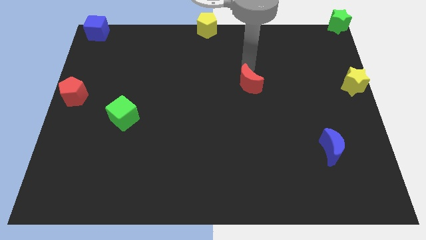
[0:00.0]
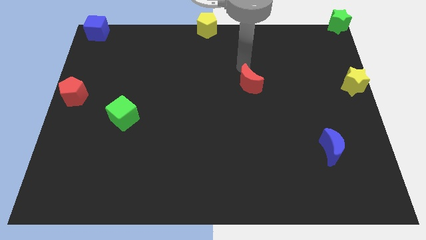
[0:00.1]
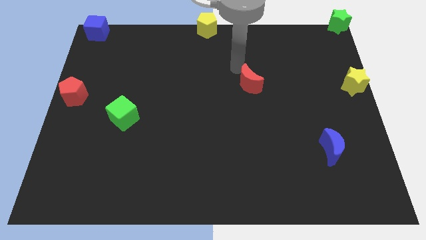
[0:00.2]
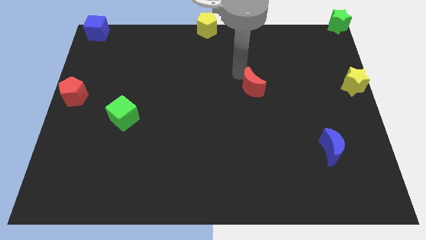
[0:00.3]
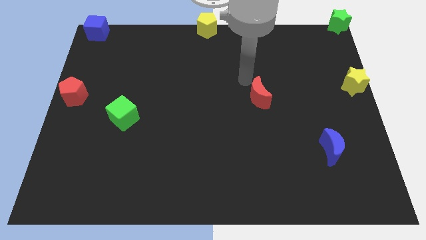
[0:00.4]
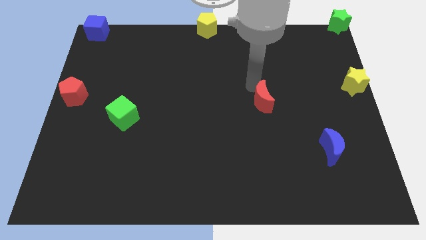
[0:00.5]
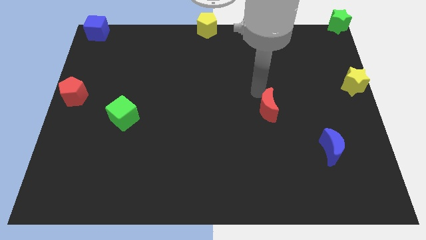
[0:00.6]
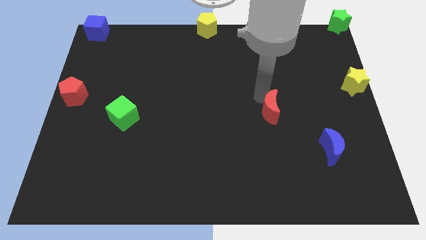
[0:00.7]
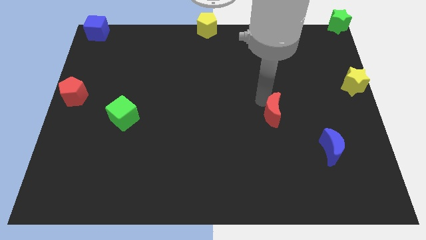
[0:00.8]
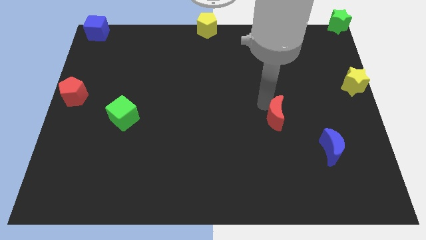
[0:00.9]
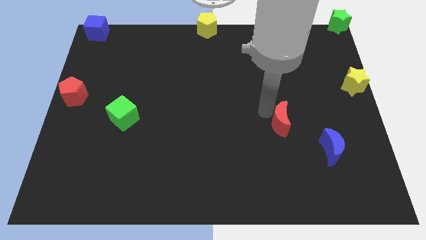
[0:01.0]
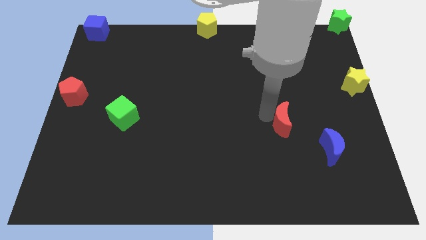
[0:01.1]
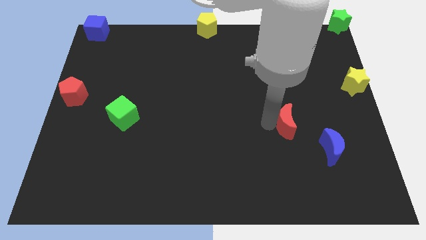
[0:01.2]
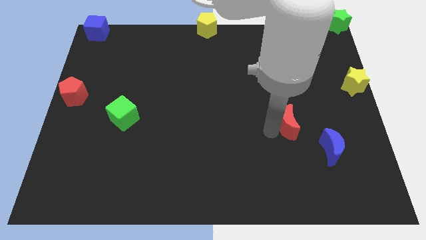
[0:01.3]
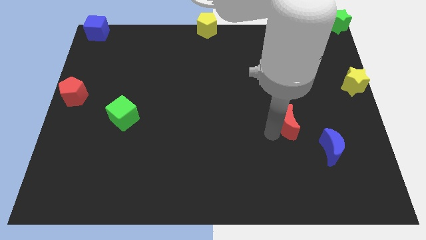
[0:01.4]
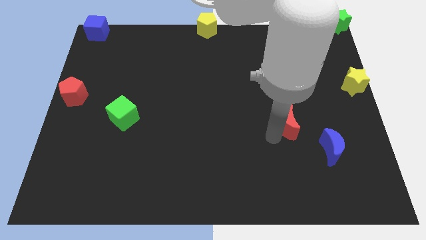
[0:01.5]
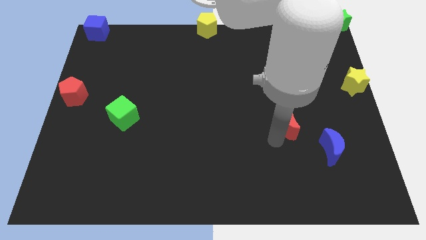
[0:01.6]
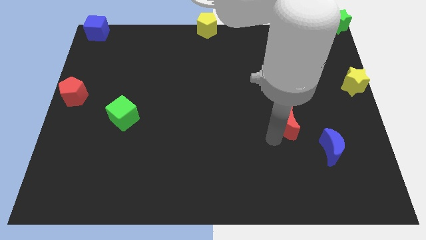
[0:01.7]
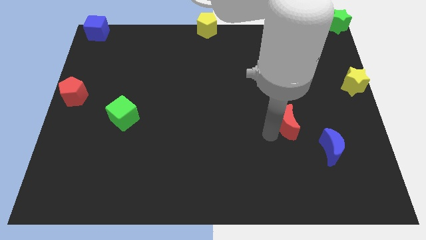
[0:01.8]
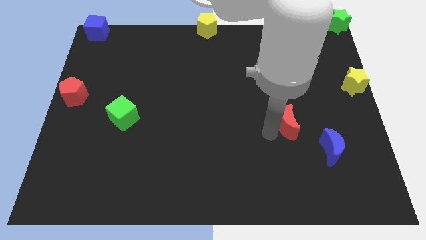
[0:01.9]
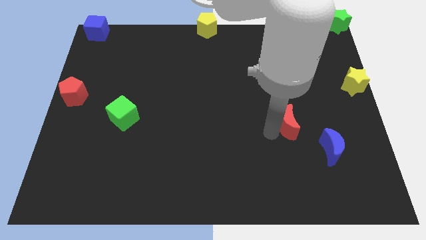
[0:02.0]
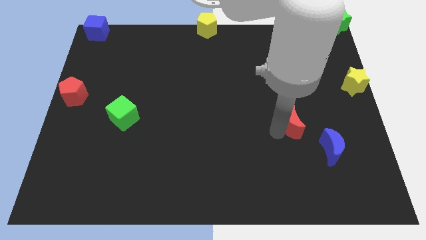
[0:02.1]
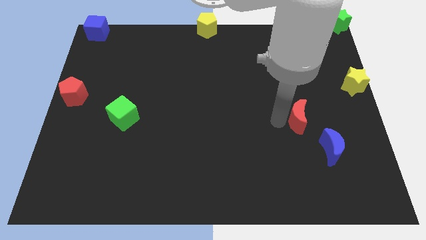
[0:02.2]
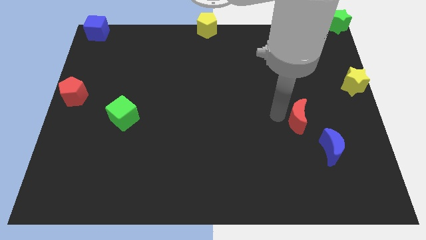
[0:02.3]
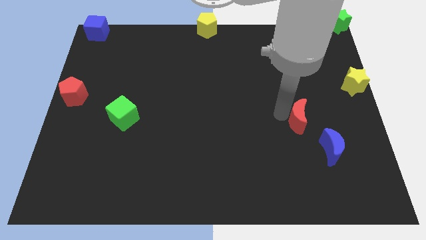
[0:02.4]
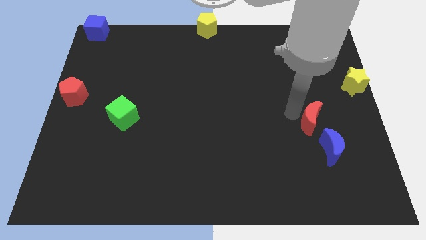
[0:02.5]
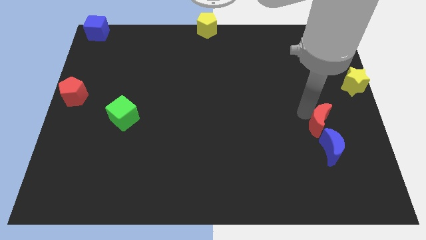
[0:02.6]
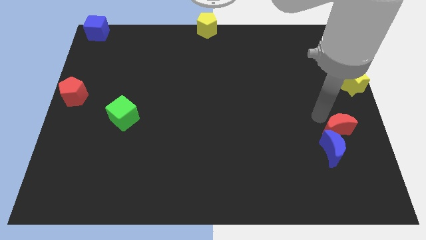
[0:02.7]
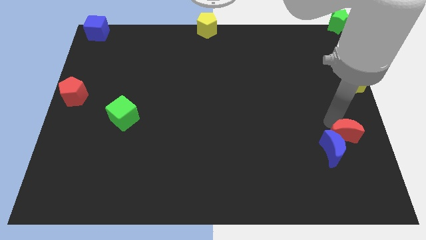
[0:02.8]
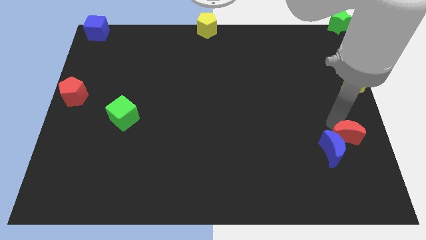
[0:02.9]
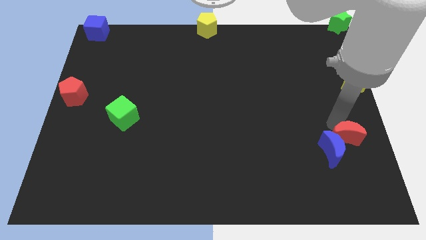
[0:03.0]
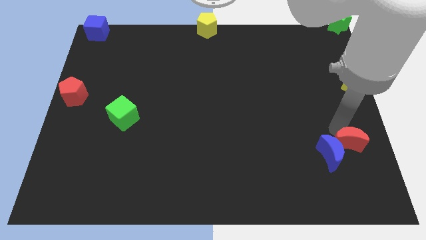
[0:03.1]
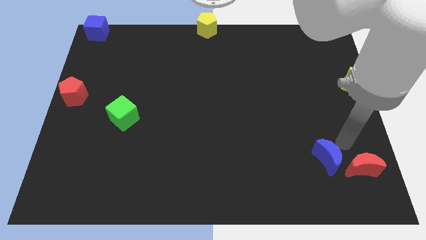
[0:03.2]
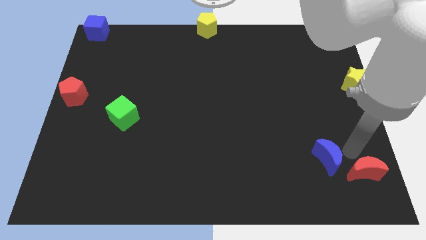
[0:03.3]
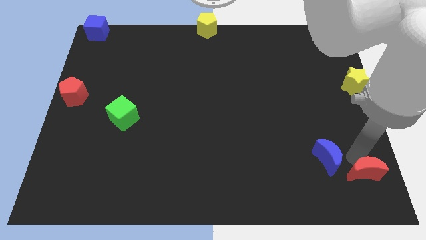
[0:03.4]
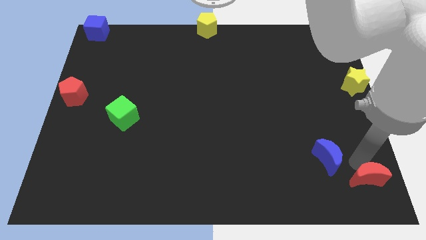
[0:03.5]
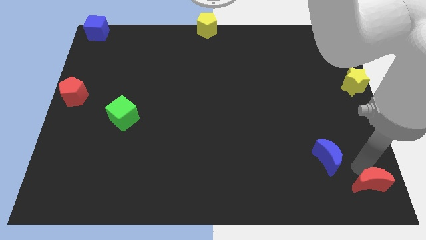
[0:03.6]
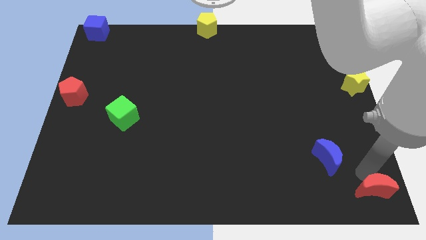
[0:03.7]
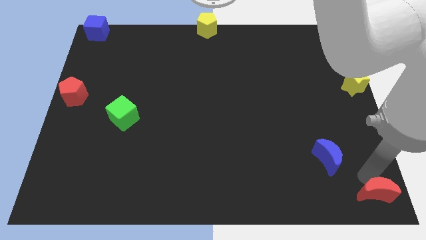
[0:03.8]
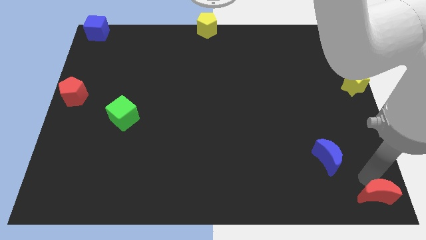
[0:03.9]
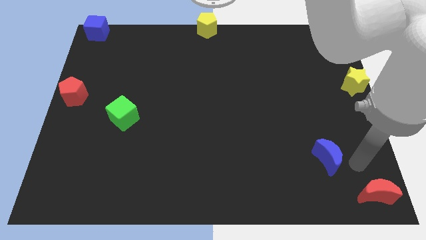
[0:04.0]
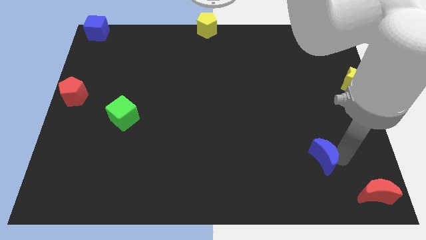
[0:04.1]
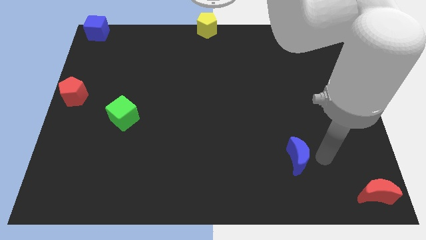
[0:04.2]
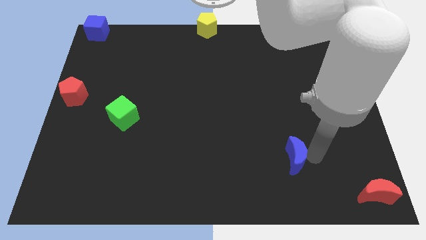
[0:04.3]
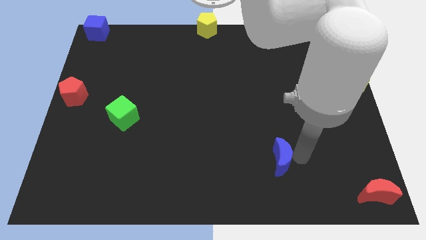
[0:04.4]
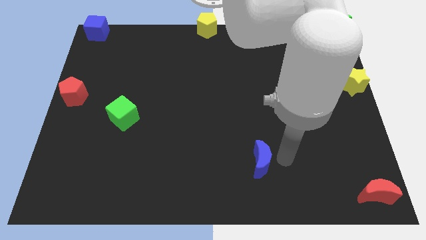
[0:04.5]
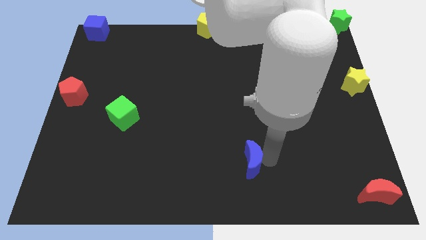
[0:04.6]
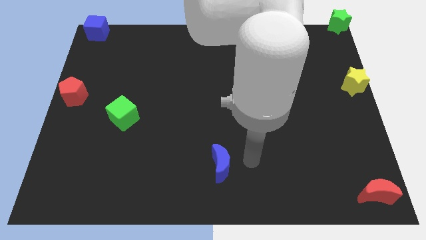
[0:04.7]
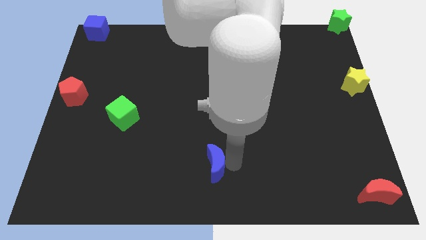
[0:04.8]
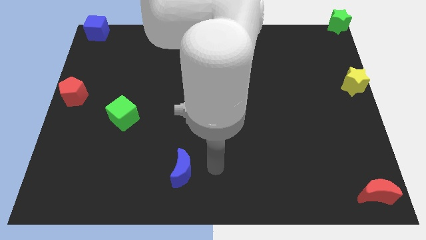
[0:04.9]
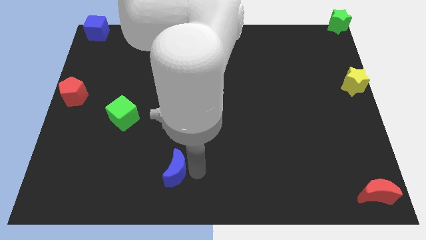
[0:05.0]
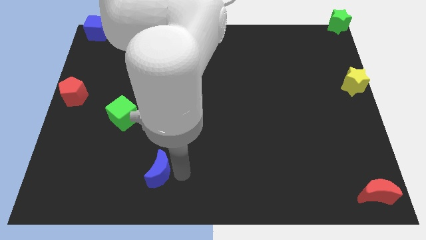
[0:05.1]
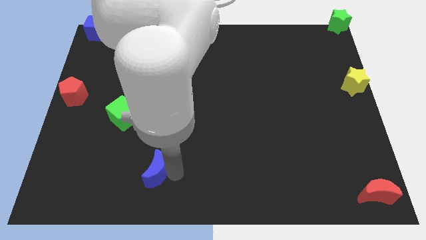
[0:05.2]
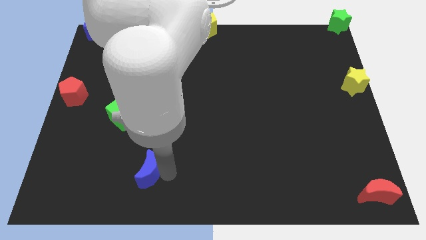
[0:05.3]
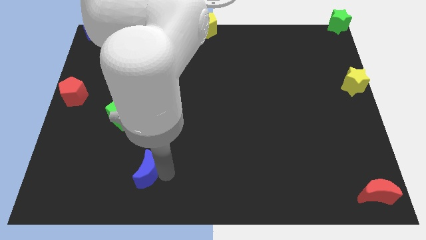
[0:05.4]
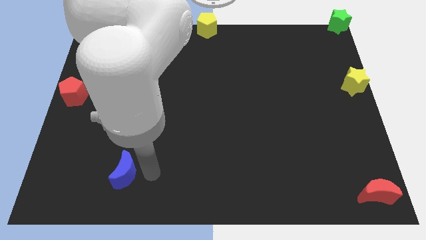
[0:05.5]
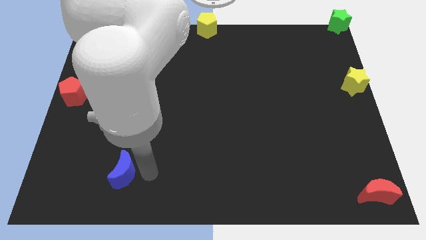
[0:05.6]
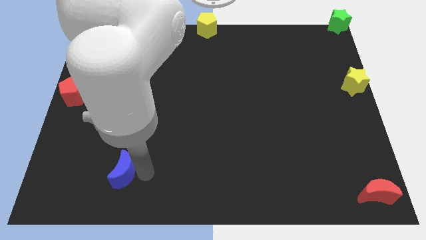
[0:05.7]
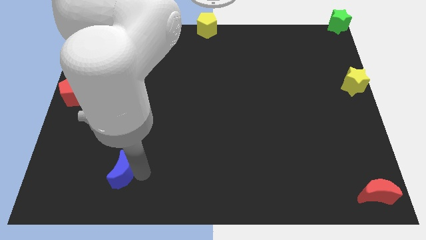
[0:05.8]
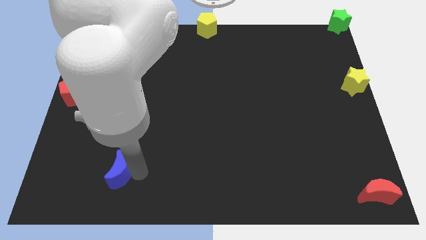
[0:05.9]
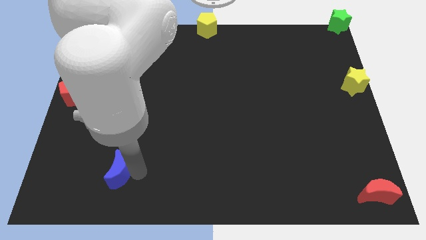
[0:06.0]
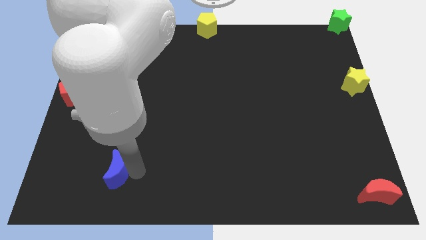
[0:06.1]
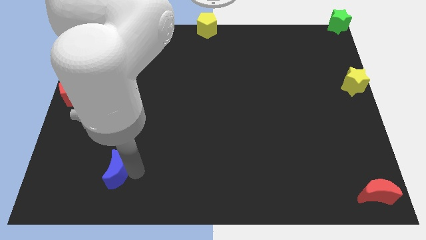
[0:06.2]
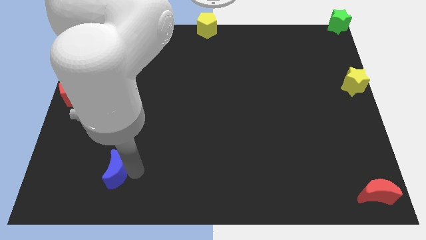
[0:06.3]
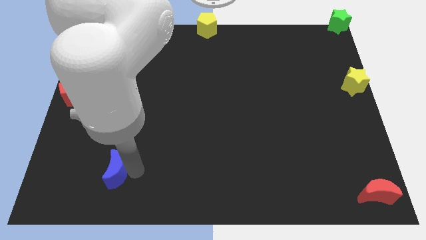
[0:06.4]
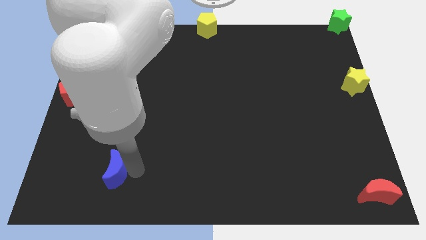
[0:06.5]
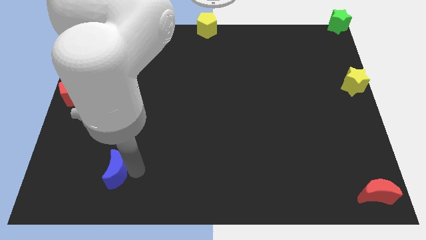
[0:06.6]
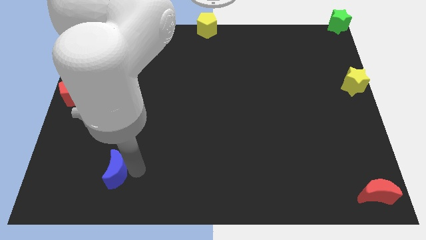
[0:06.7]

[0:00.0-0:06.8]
move the blue crescent vertical to green cube

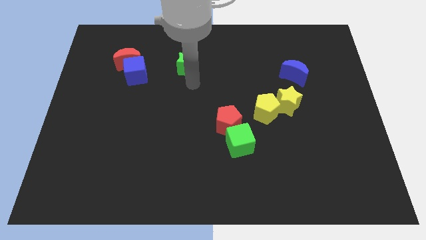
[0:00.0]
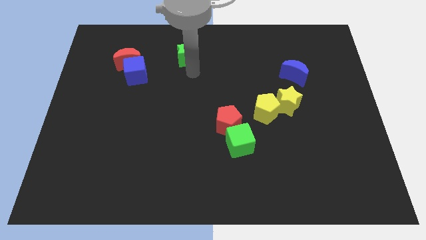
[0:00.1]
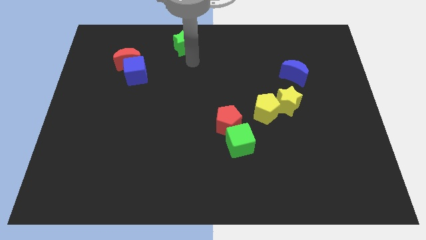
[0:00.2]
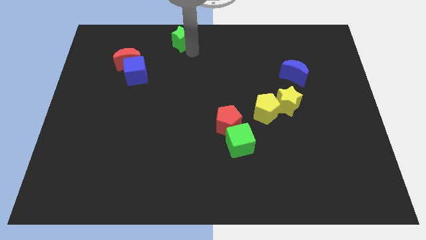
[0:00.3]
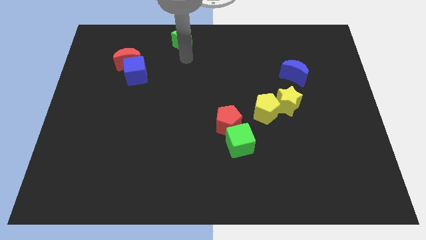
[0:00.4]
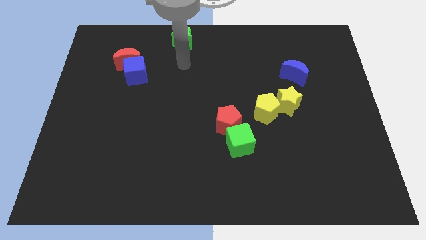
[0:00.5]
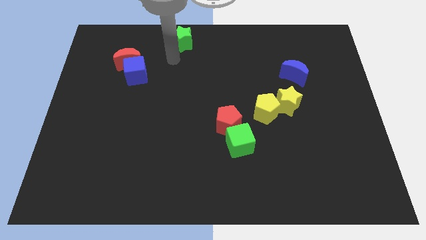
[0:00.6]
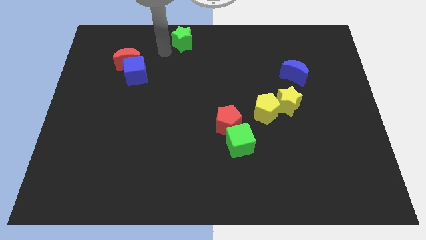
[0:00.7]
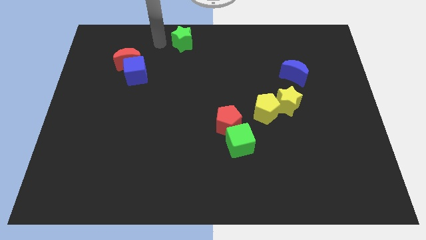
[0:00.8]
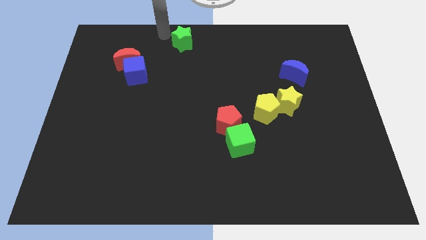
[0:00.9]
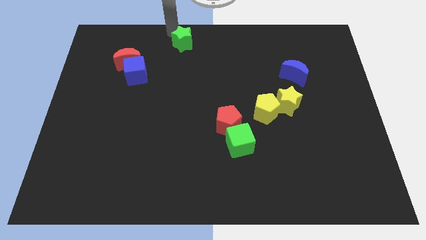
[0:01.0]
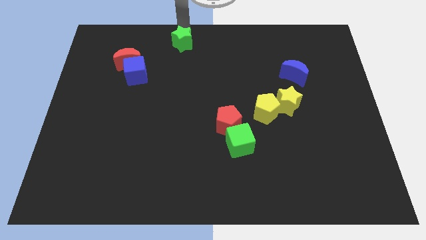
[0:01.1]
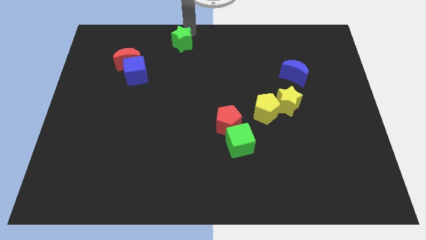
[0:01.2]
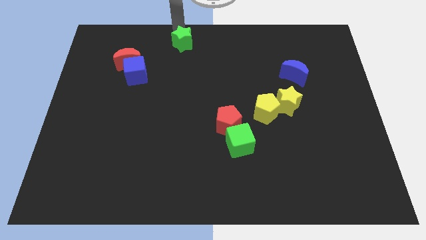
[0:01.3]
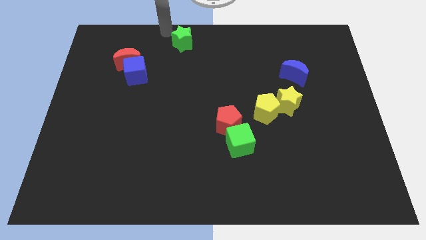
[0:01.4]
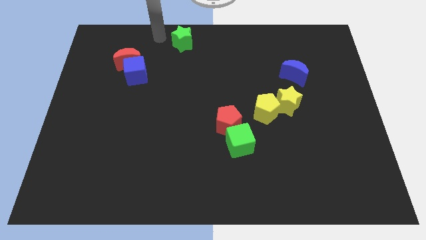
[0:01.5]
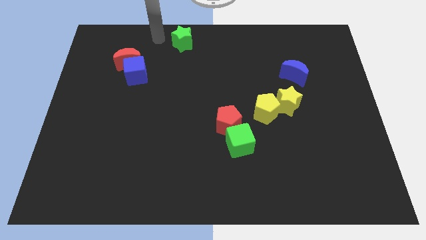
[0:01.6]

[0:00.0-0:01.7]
push the green star to the top side

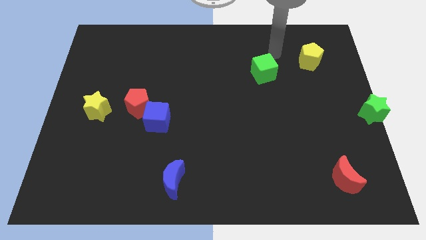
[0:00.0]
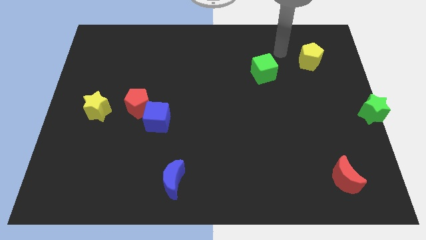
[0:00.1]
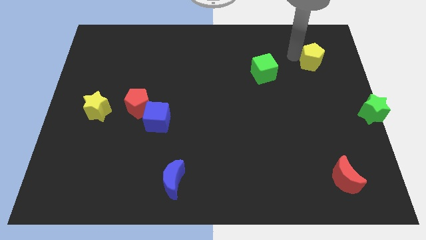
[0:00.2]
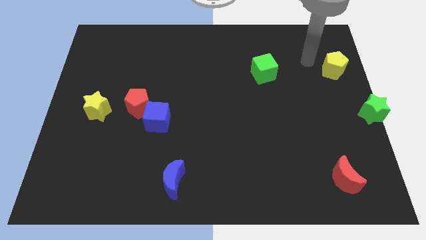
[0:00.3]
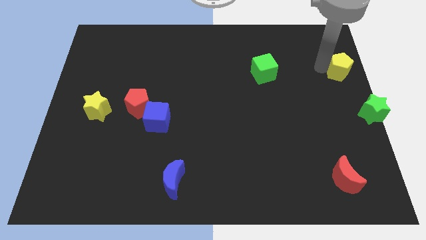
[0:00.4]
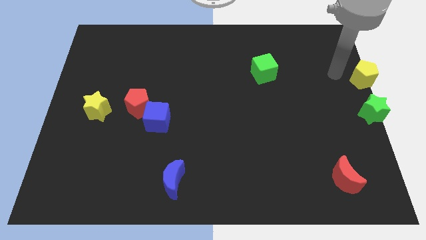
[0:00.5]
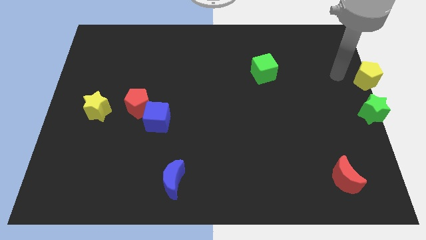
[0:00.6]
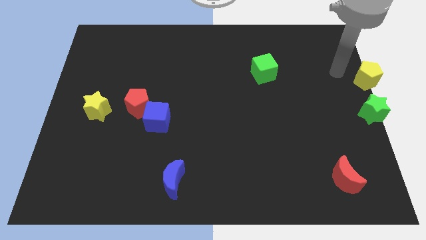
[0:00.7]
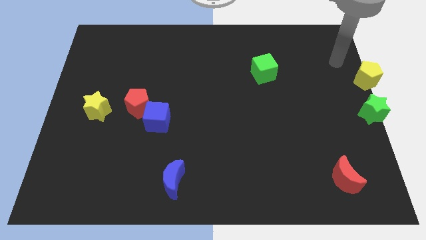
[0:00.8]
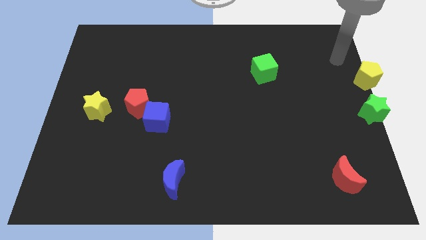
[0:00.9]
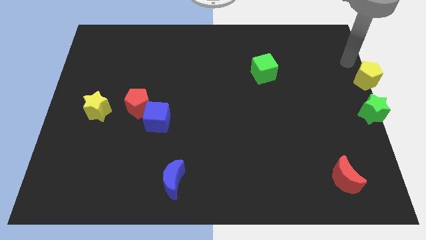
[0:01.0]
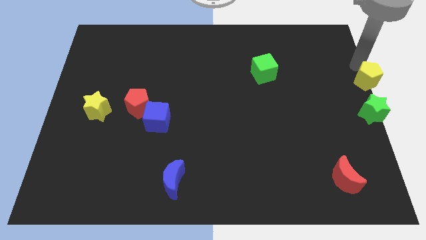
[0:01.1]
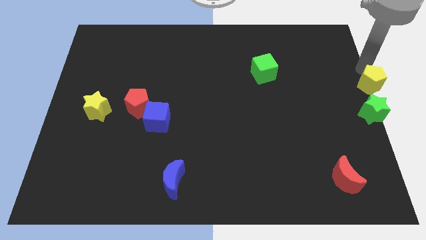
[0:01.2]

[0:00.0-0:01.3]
put the yellow pentagon above the green star
